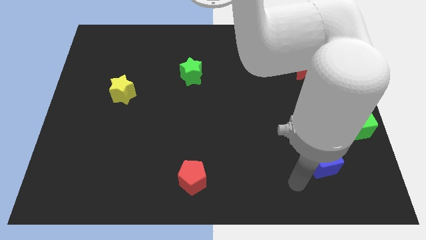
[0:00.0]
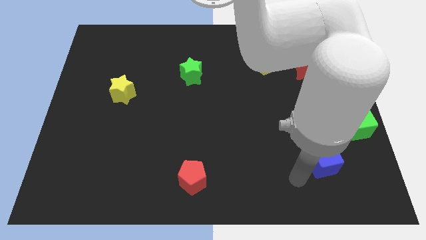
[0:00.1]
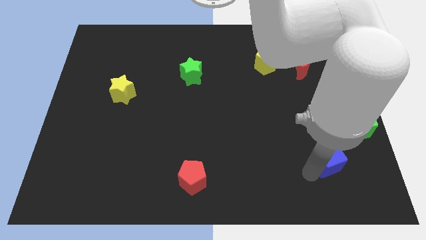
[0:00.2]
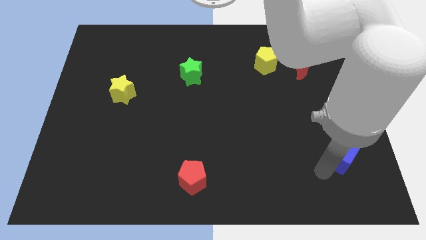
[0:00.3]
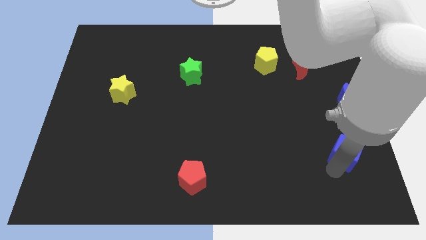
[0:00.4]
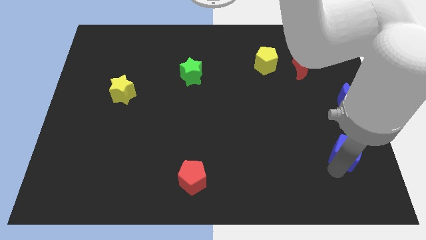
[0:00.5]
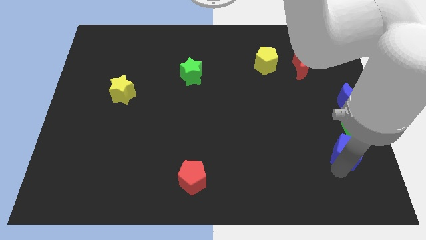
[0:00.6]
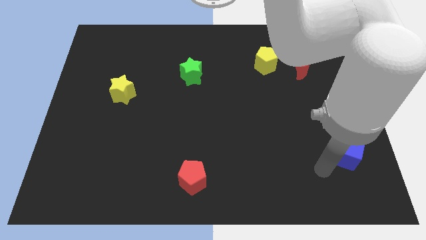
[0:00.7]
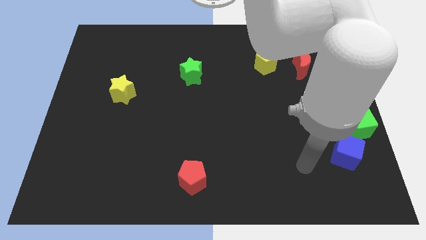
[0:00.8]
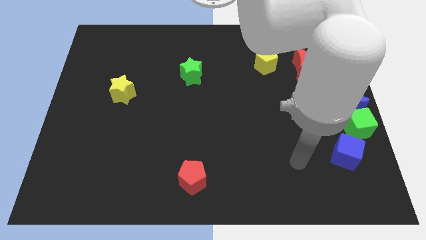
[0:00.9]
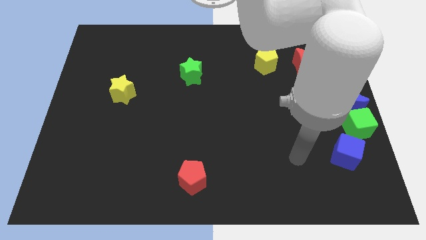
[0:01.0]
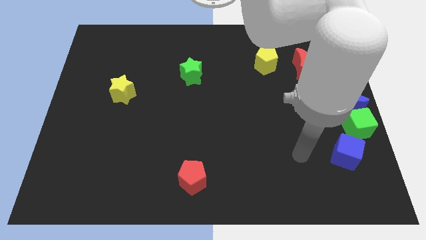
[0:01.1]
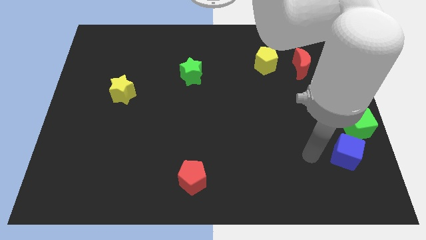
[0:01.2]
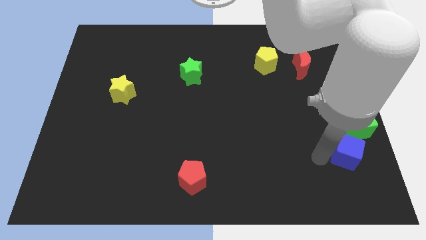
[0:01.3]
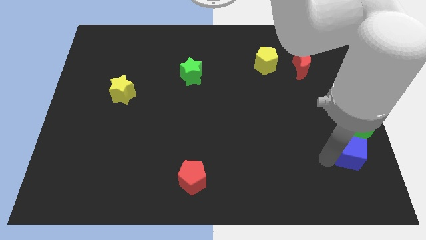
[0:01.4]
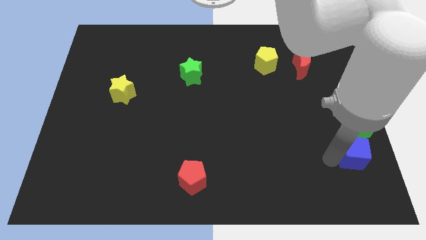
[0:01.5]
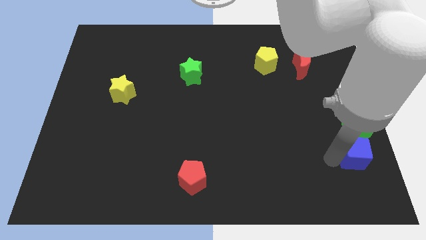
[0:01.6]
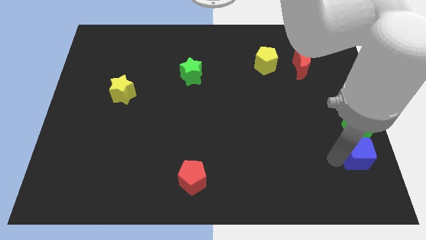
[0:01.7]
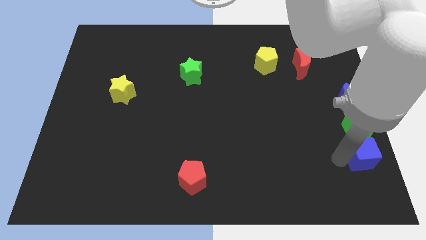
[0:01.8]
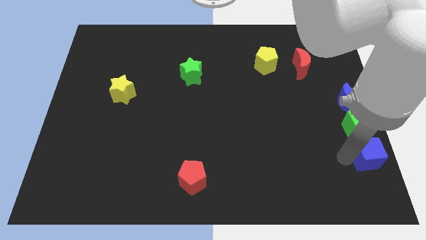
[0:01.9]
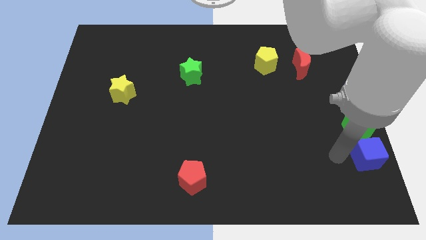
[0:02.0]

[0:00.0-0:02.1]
slide blue cube below green cube

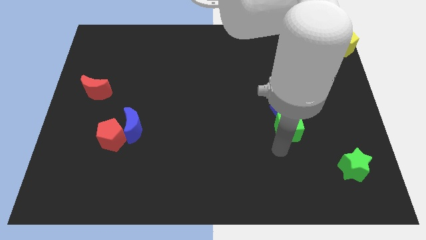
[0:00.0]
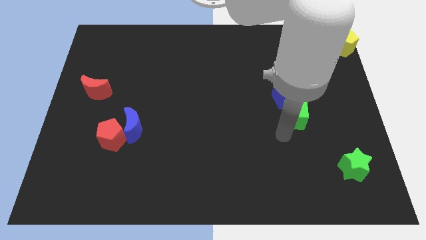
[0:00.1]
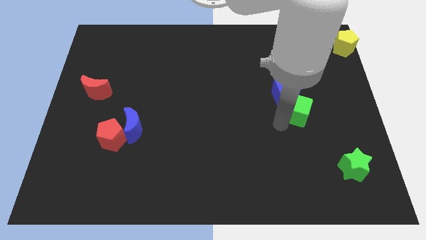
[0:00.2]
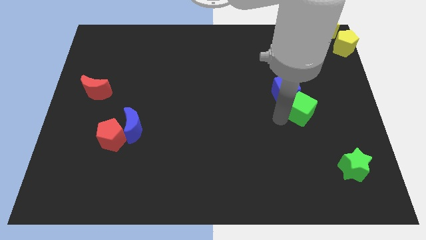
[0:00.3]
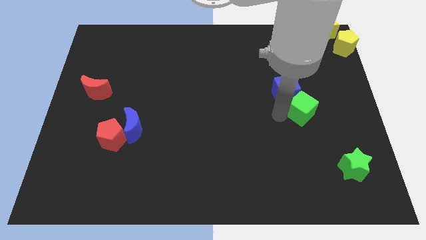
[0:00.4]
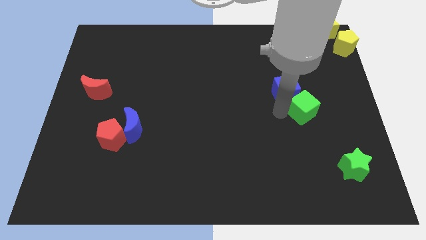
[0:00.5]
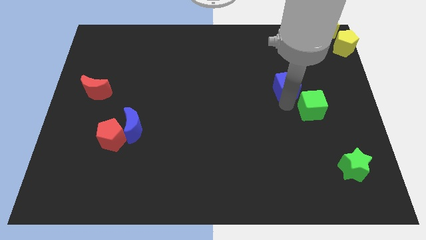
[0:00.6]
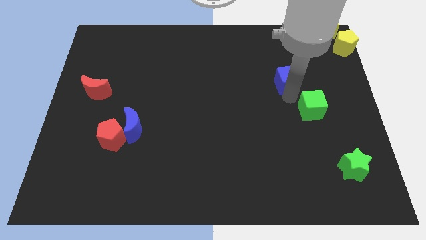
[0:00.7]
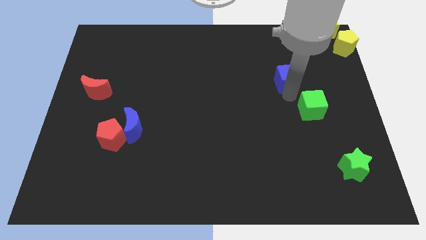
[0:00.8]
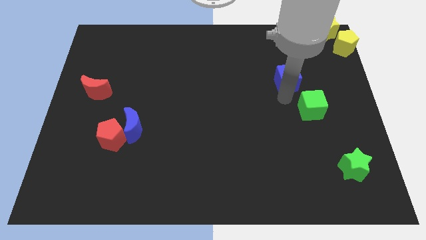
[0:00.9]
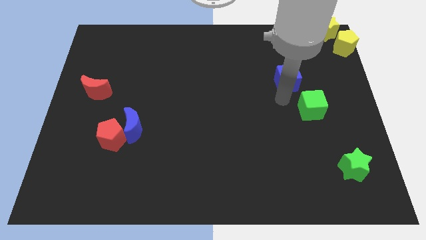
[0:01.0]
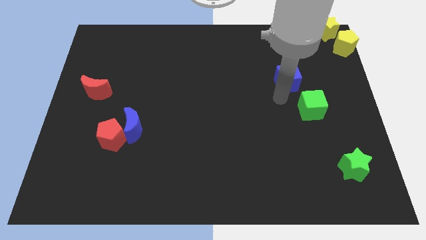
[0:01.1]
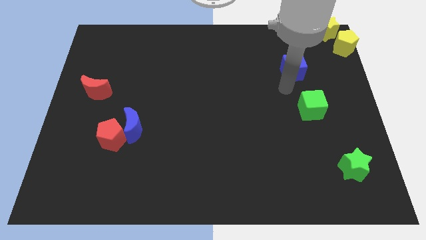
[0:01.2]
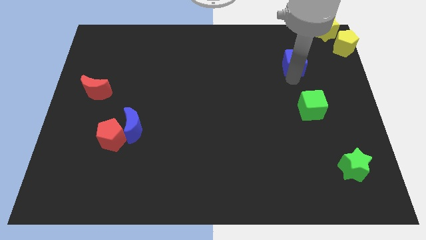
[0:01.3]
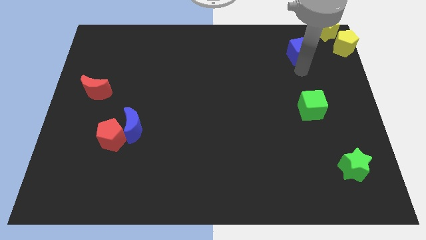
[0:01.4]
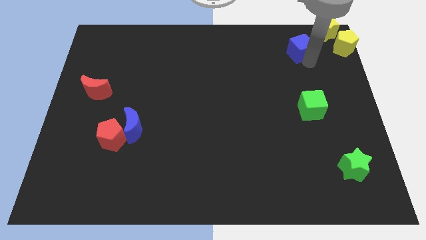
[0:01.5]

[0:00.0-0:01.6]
move blue cube to the yellow blocks

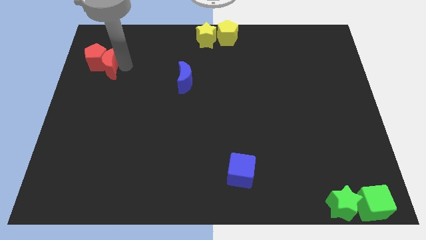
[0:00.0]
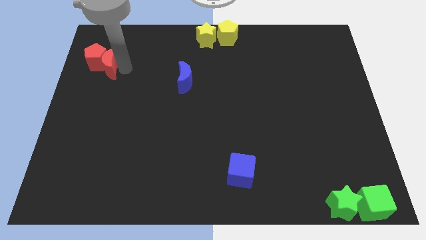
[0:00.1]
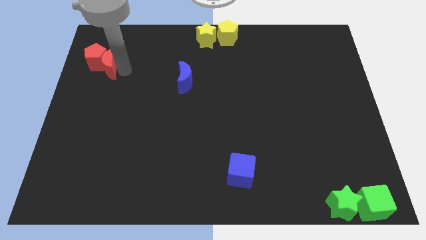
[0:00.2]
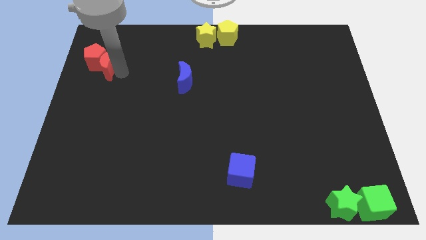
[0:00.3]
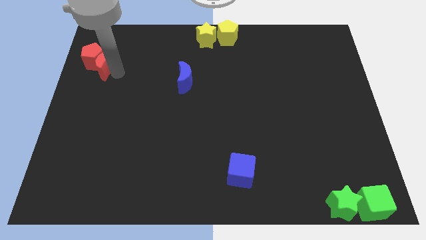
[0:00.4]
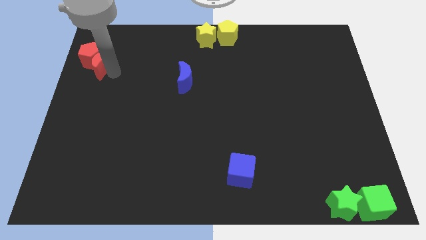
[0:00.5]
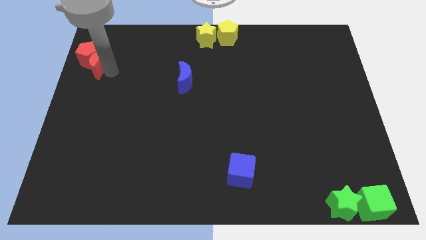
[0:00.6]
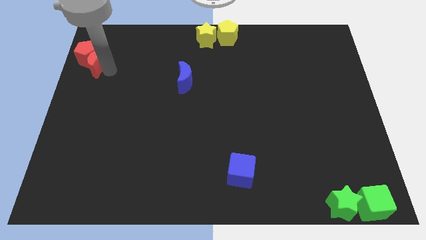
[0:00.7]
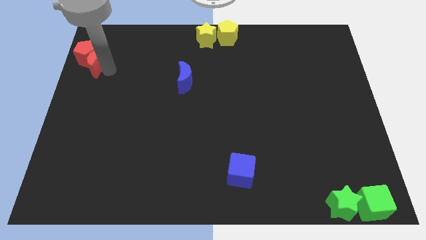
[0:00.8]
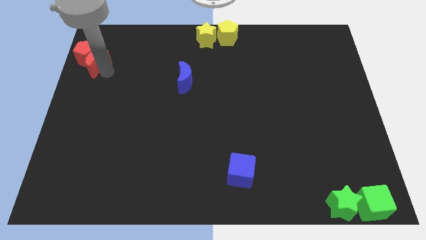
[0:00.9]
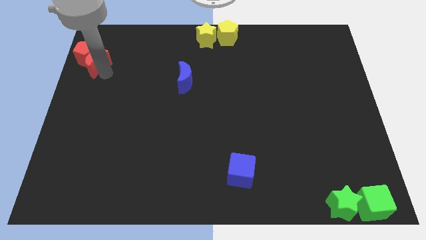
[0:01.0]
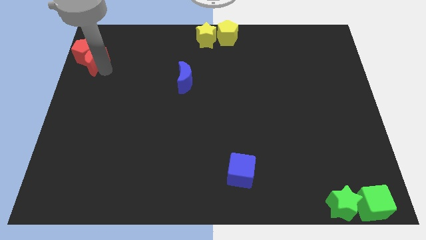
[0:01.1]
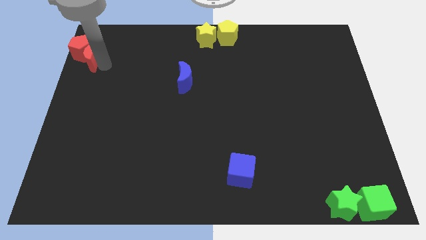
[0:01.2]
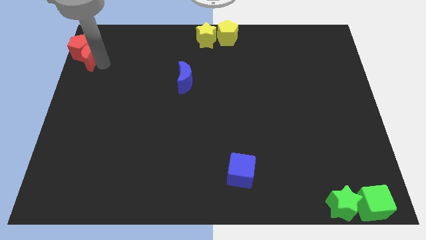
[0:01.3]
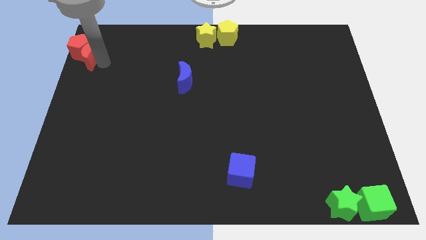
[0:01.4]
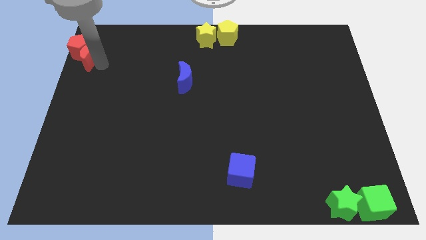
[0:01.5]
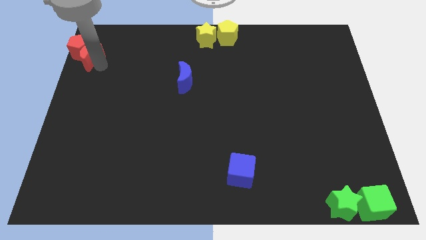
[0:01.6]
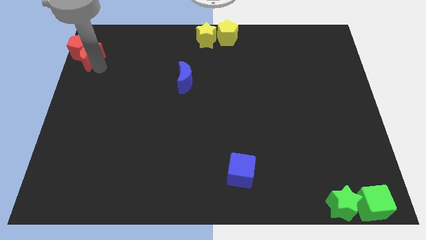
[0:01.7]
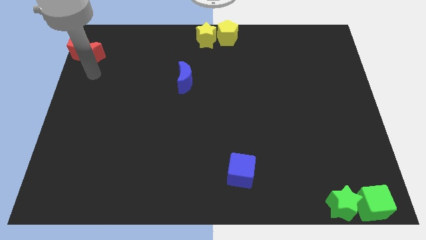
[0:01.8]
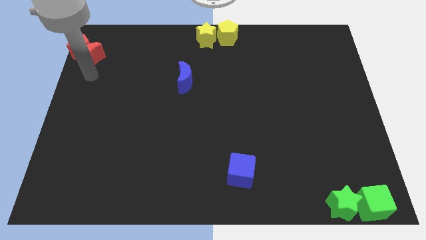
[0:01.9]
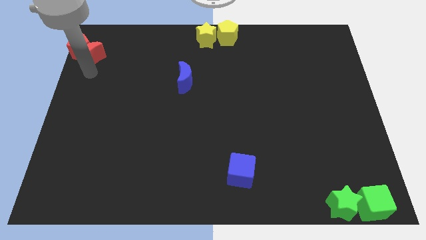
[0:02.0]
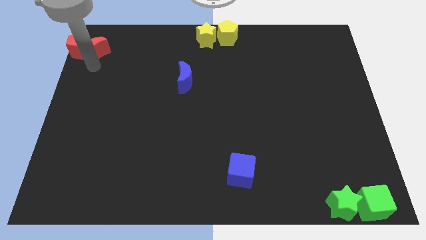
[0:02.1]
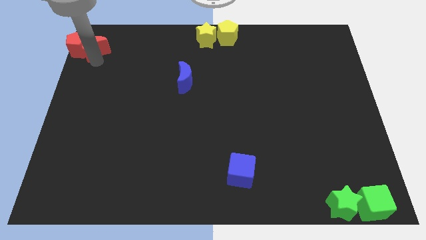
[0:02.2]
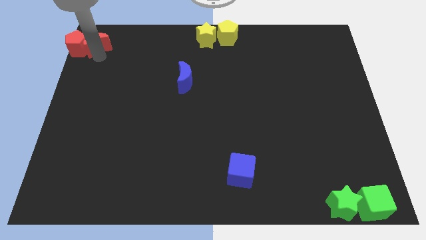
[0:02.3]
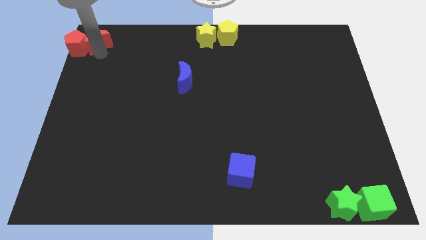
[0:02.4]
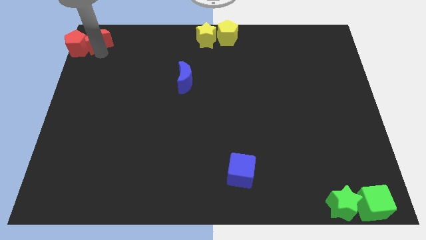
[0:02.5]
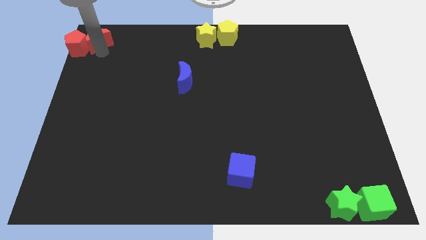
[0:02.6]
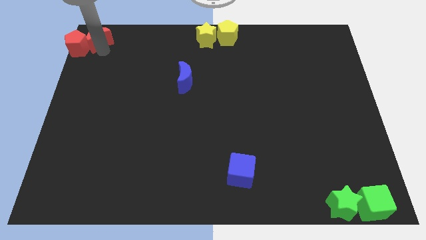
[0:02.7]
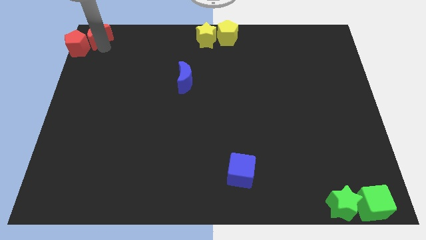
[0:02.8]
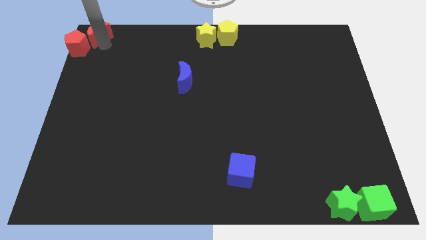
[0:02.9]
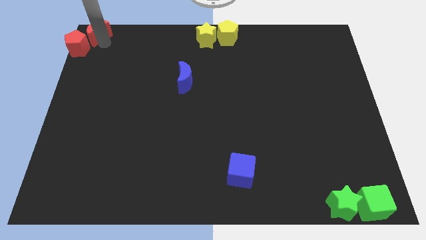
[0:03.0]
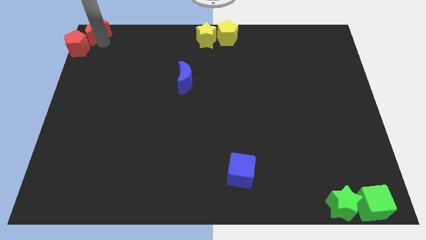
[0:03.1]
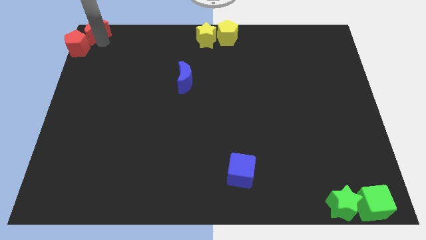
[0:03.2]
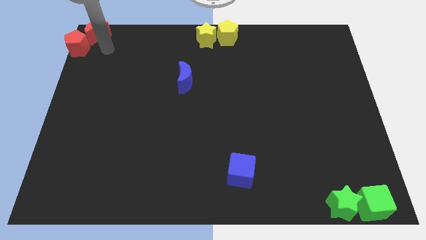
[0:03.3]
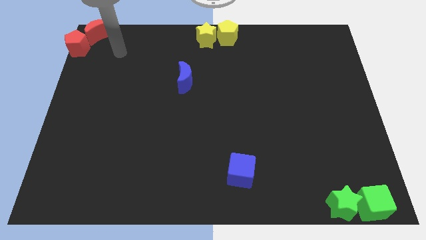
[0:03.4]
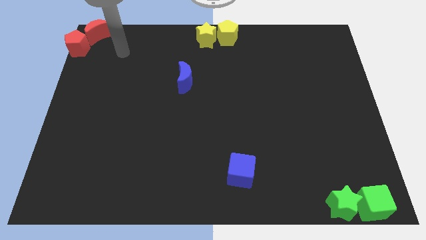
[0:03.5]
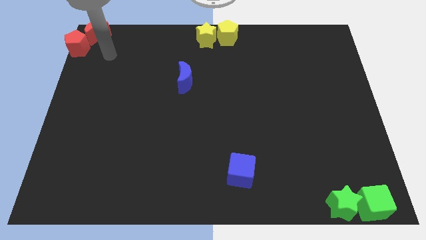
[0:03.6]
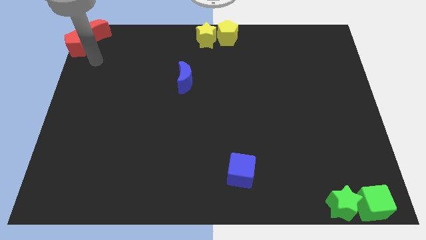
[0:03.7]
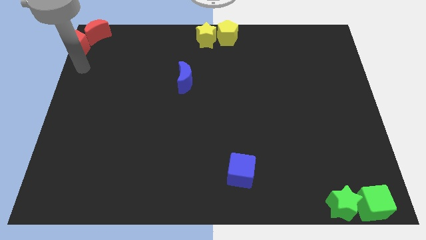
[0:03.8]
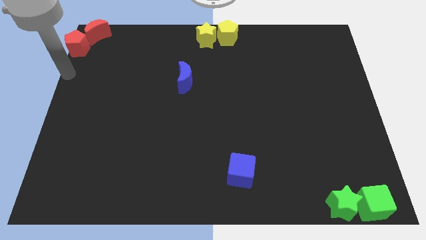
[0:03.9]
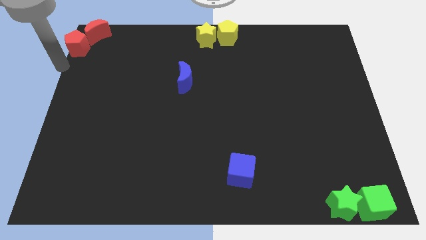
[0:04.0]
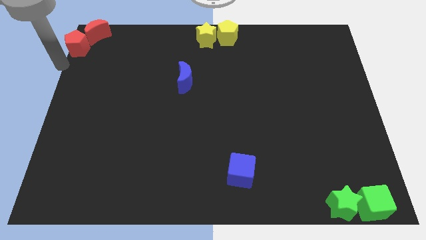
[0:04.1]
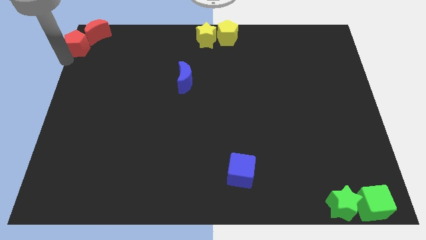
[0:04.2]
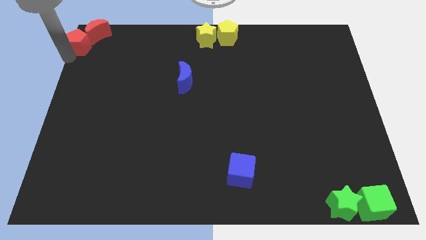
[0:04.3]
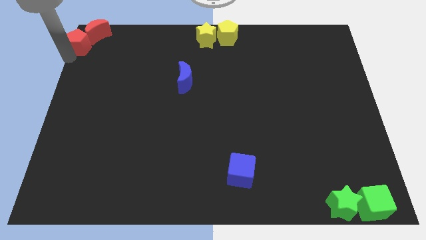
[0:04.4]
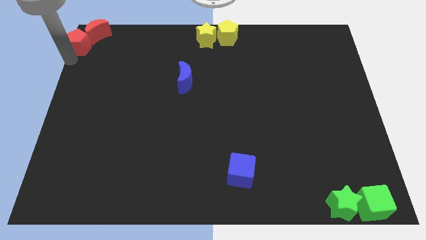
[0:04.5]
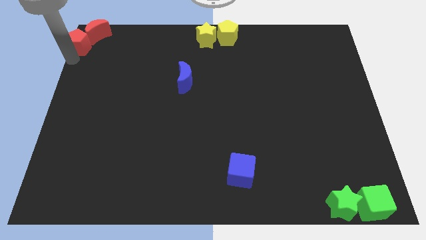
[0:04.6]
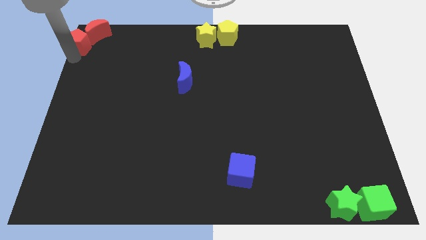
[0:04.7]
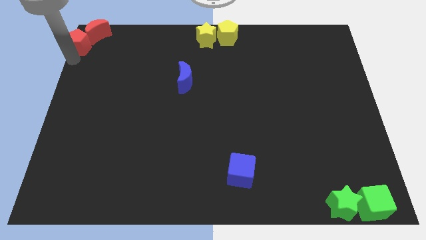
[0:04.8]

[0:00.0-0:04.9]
push the group of red blocks to the top left corner of the board

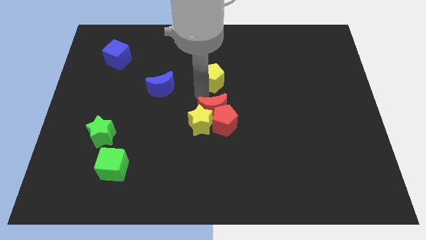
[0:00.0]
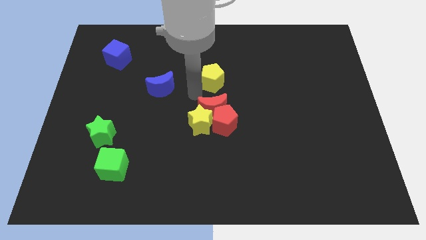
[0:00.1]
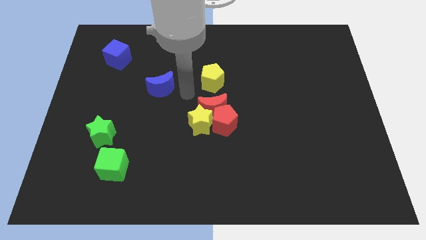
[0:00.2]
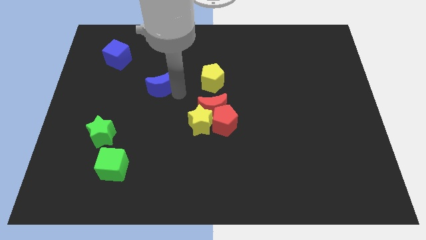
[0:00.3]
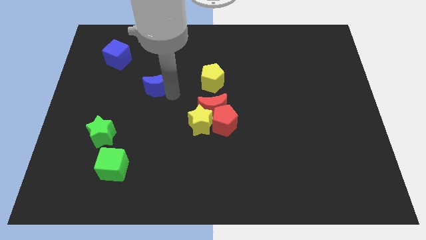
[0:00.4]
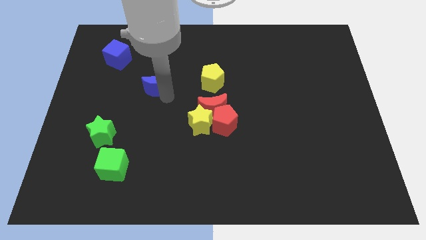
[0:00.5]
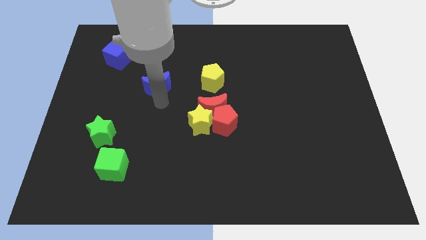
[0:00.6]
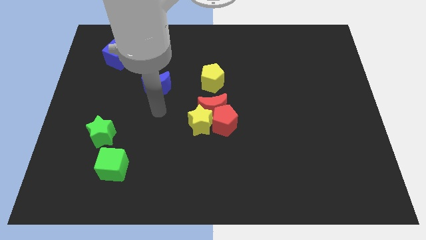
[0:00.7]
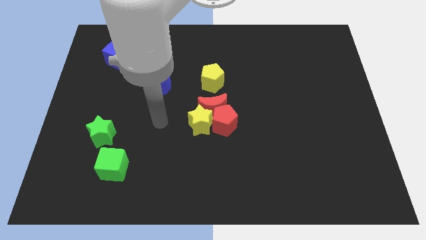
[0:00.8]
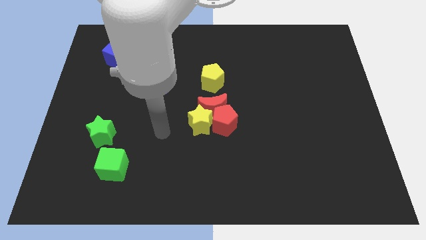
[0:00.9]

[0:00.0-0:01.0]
slightly move the blue crescent to the top of the board
